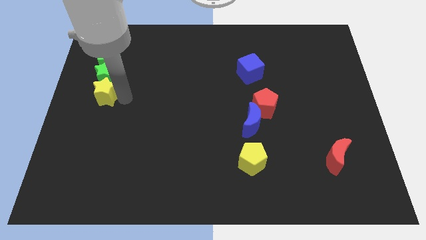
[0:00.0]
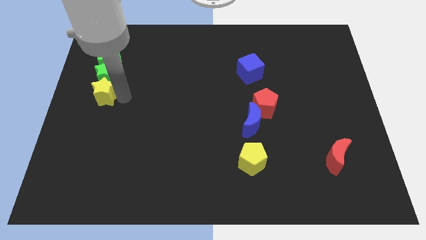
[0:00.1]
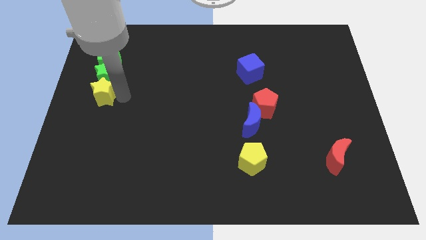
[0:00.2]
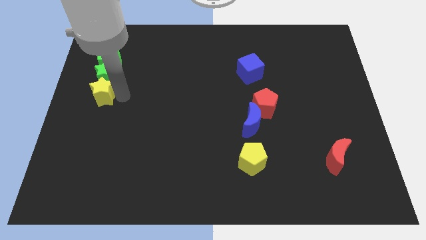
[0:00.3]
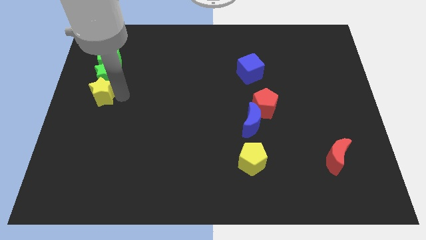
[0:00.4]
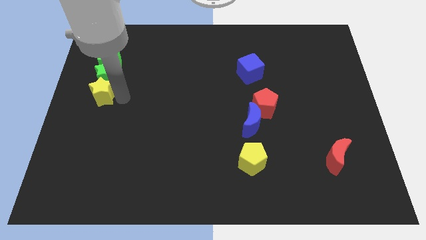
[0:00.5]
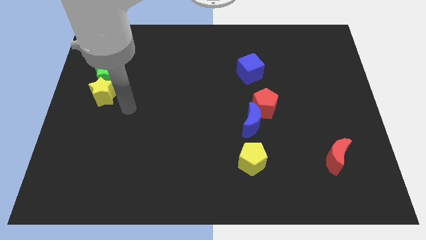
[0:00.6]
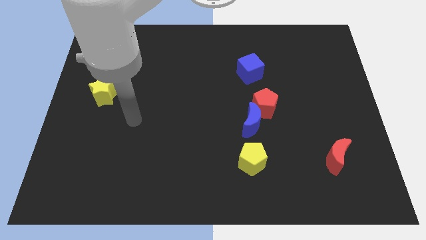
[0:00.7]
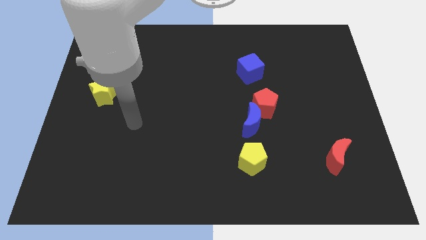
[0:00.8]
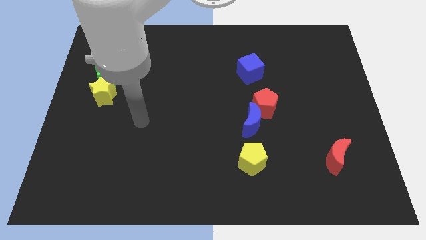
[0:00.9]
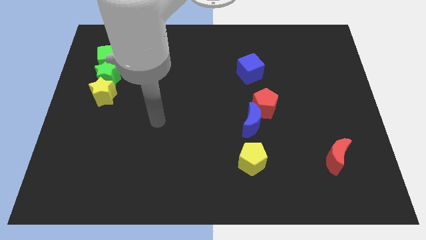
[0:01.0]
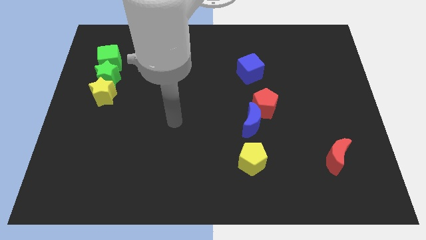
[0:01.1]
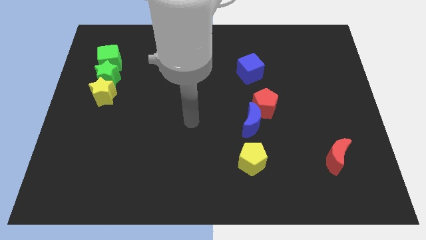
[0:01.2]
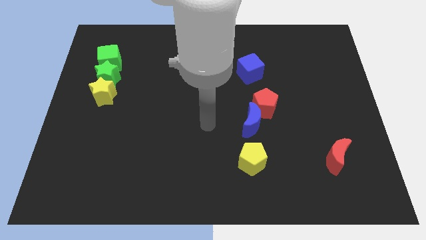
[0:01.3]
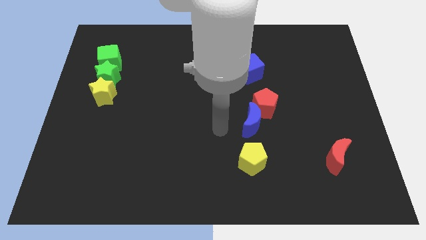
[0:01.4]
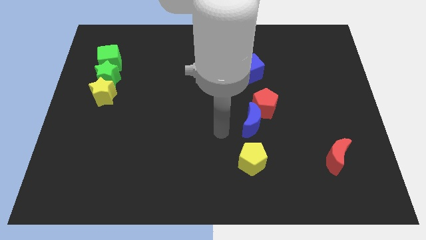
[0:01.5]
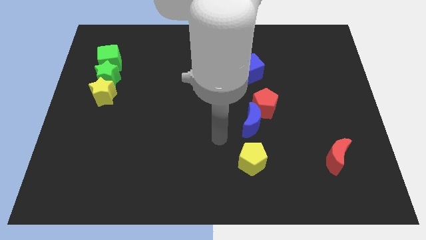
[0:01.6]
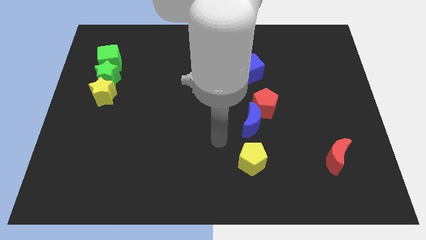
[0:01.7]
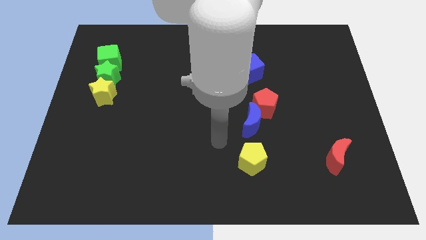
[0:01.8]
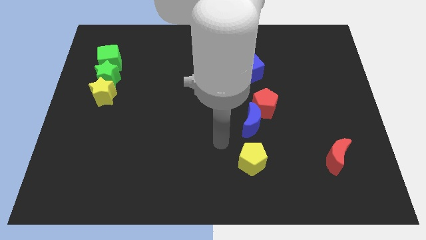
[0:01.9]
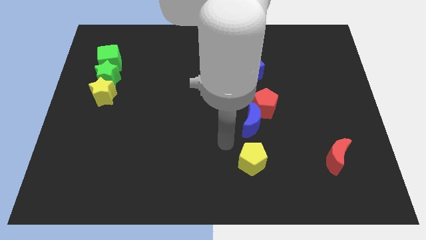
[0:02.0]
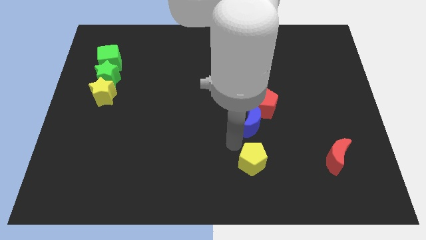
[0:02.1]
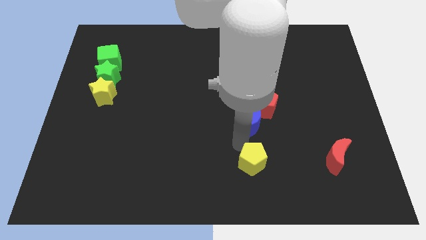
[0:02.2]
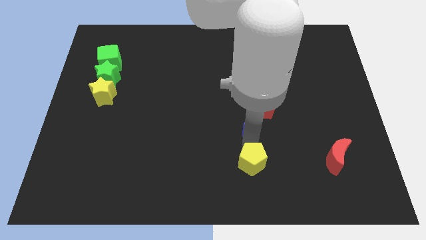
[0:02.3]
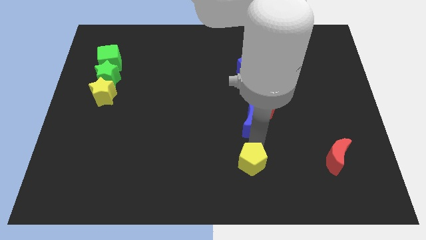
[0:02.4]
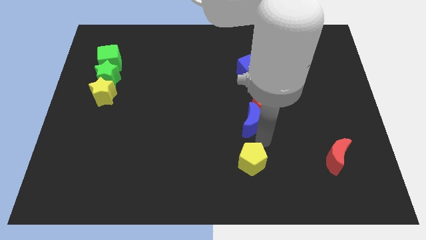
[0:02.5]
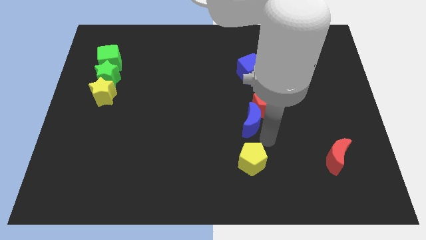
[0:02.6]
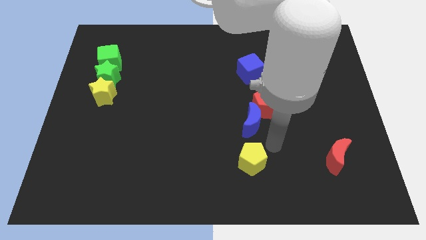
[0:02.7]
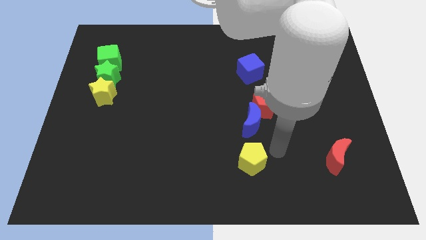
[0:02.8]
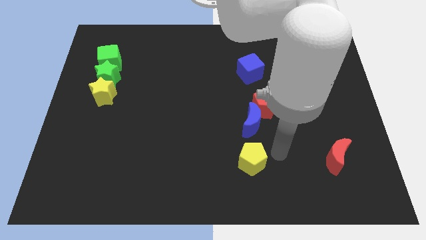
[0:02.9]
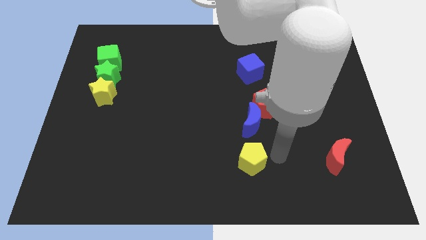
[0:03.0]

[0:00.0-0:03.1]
move your arm to the right of yellow pentagon

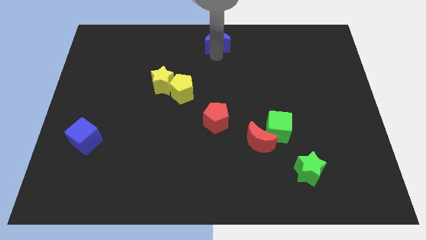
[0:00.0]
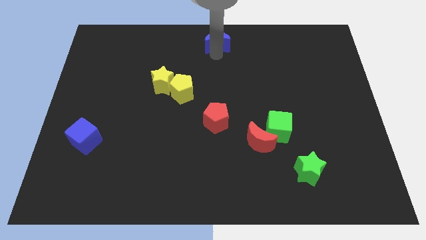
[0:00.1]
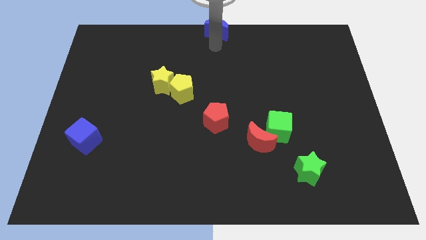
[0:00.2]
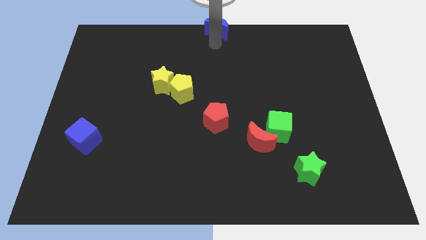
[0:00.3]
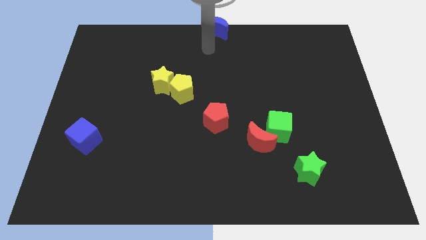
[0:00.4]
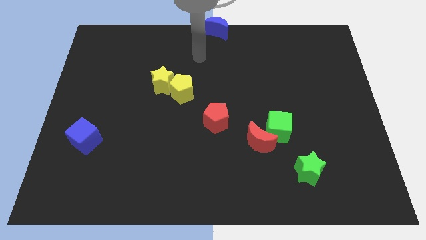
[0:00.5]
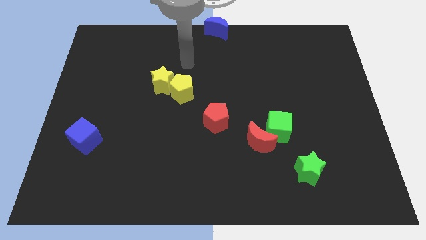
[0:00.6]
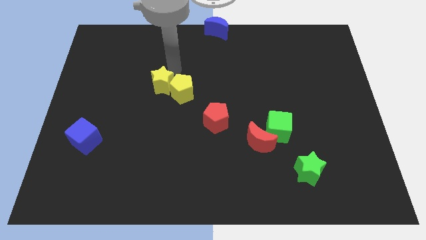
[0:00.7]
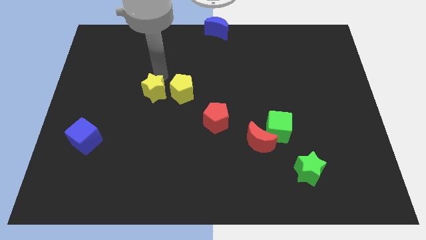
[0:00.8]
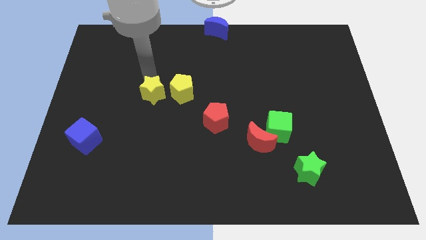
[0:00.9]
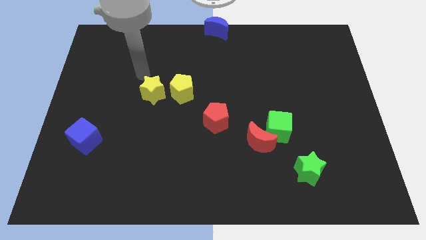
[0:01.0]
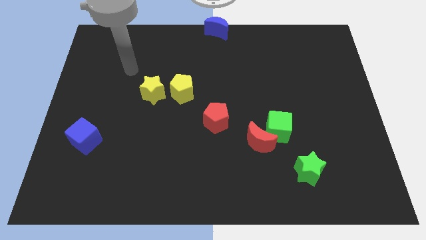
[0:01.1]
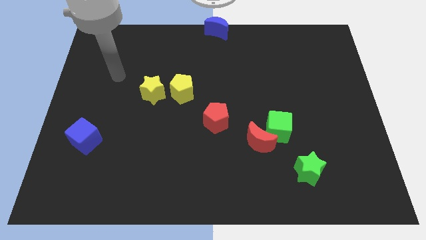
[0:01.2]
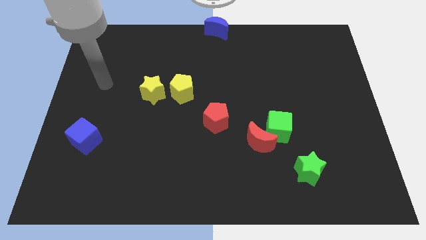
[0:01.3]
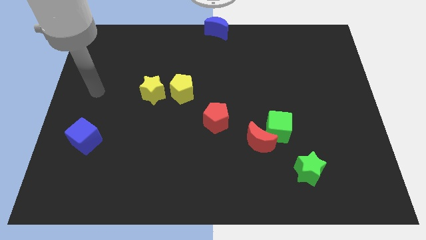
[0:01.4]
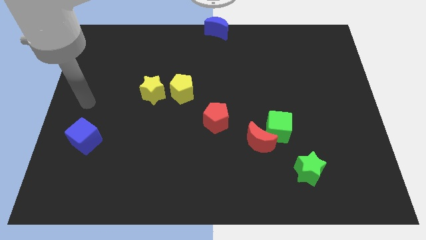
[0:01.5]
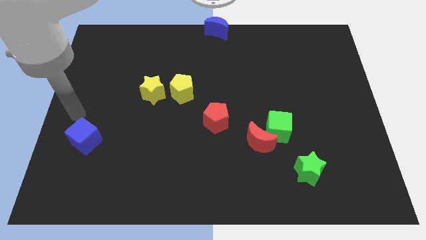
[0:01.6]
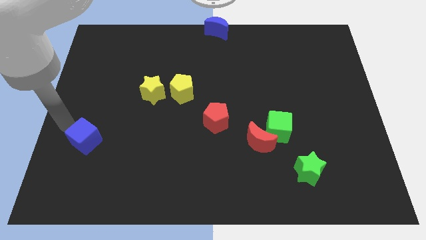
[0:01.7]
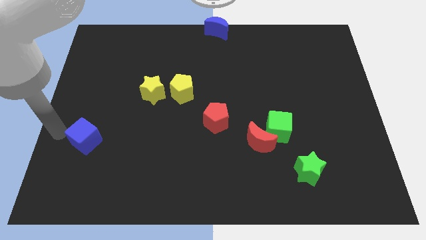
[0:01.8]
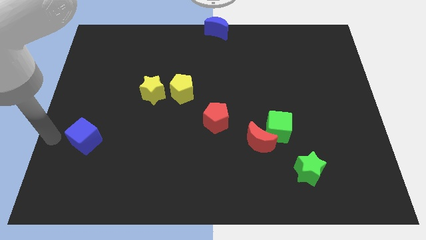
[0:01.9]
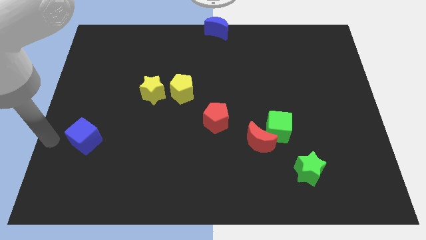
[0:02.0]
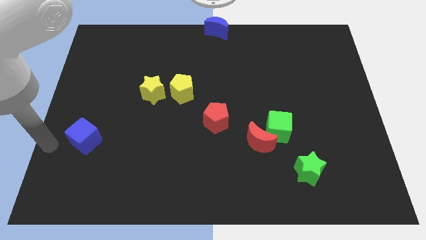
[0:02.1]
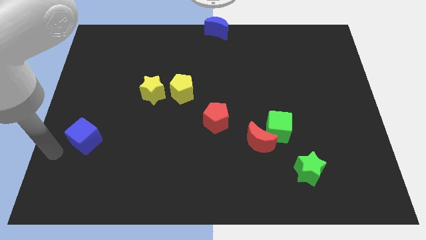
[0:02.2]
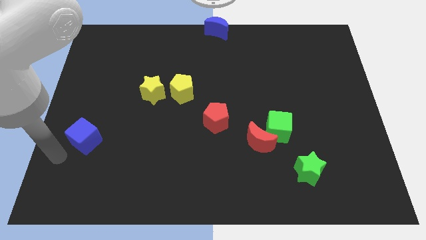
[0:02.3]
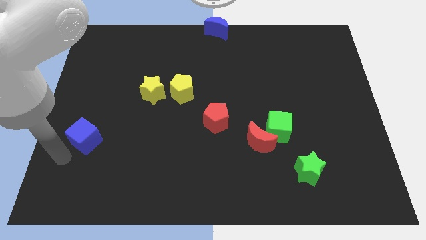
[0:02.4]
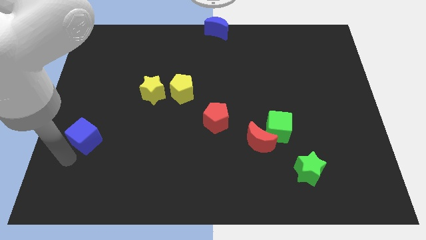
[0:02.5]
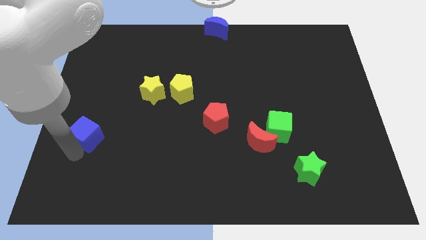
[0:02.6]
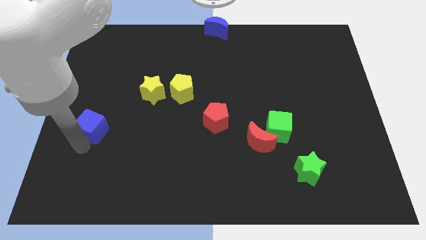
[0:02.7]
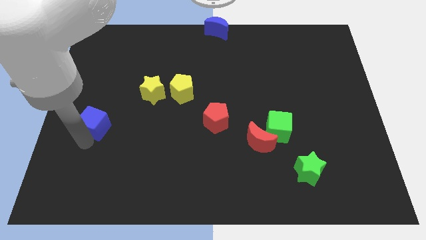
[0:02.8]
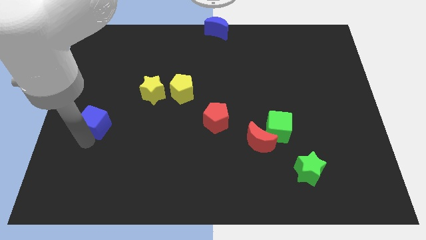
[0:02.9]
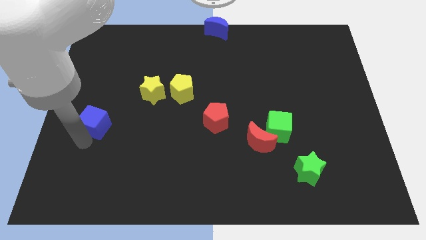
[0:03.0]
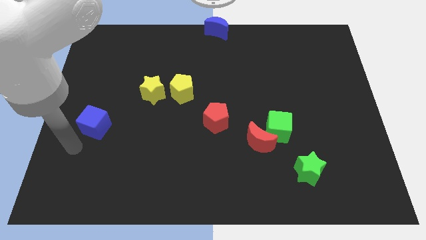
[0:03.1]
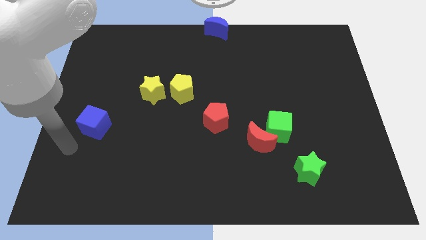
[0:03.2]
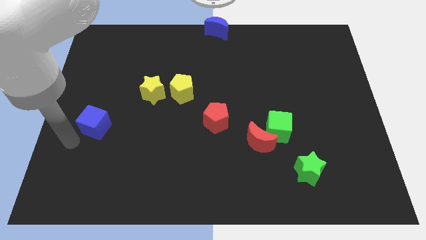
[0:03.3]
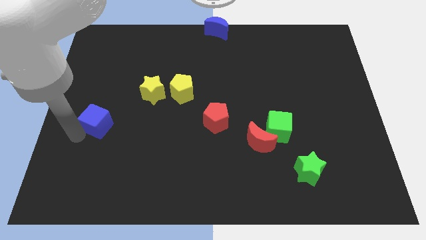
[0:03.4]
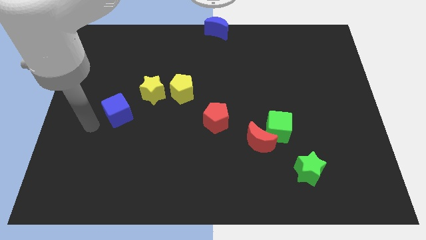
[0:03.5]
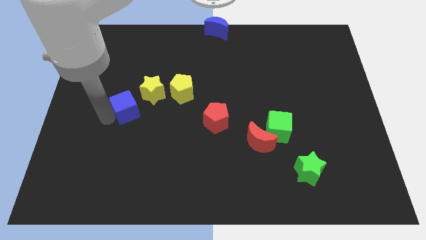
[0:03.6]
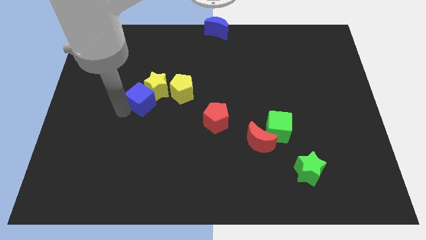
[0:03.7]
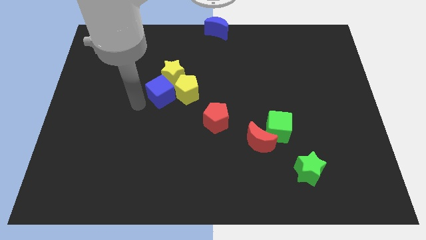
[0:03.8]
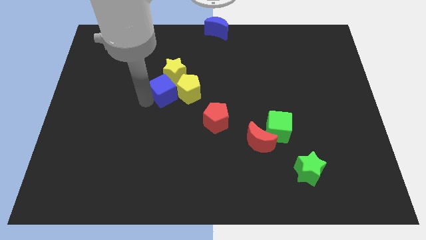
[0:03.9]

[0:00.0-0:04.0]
push the blue cube into the yellow blocks

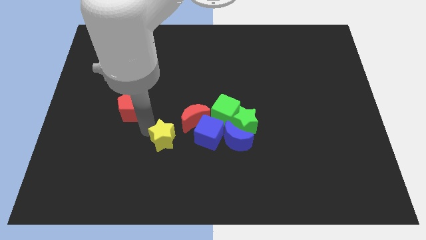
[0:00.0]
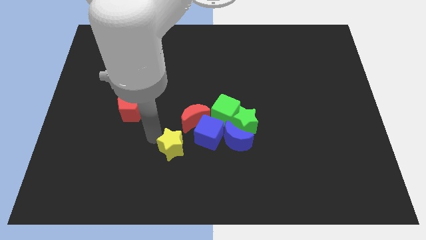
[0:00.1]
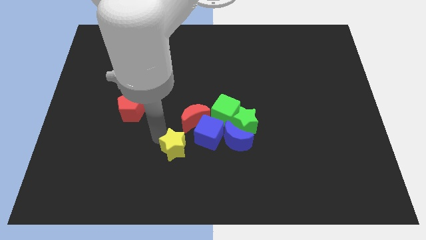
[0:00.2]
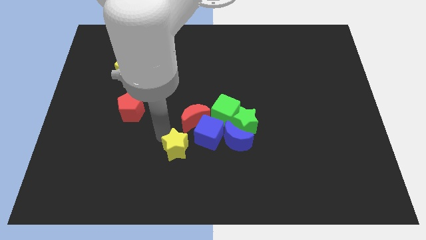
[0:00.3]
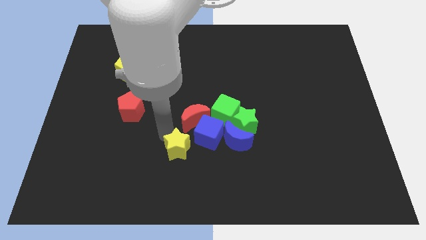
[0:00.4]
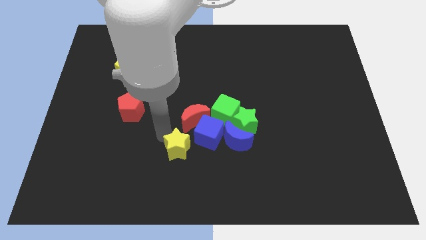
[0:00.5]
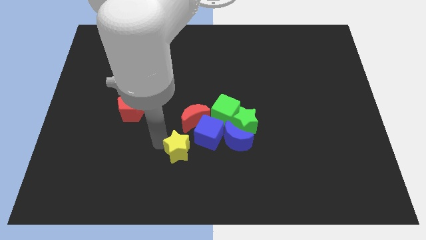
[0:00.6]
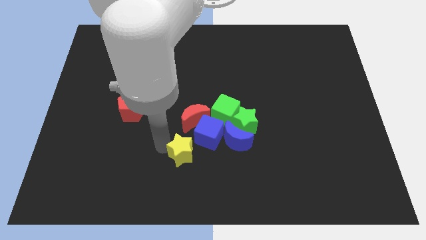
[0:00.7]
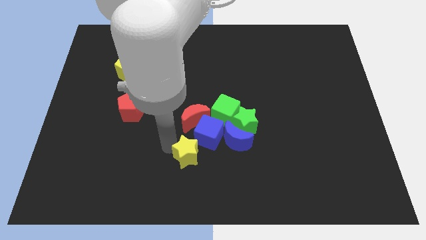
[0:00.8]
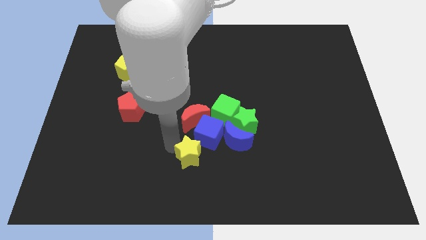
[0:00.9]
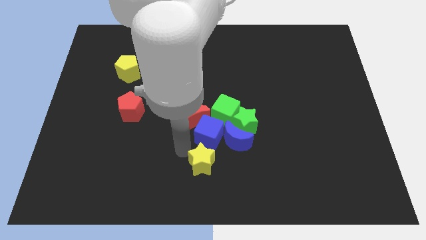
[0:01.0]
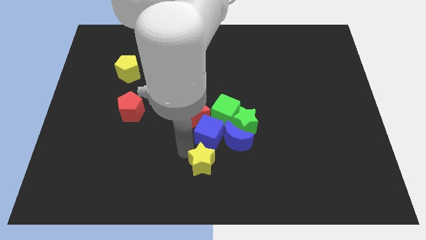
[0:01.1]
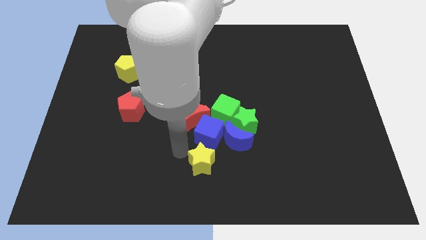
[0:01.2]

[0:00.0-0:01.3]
place yellow star below the blue cube

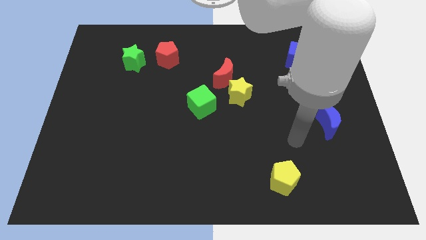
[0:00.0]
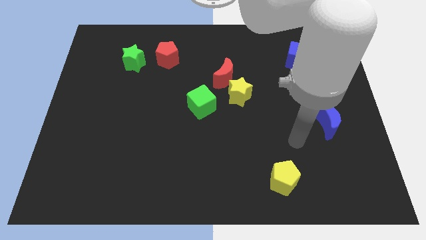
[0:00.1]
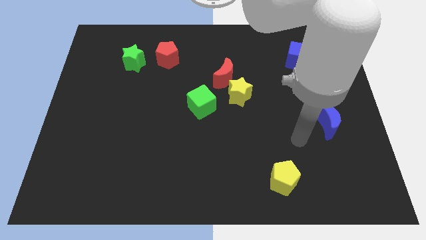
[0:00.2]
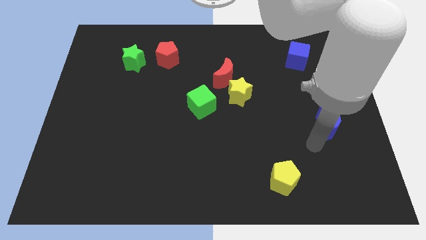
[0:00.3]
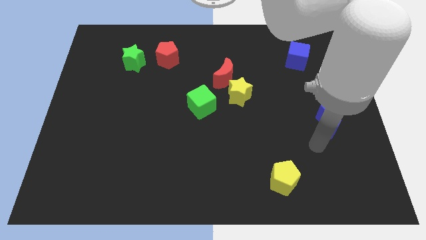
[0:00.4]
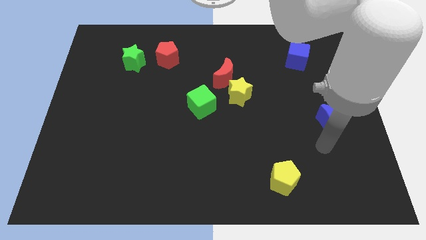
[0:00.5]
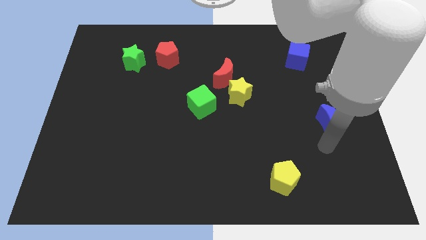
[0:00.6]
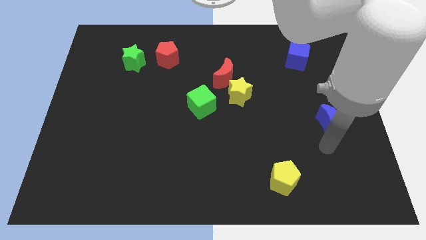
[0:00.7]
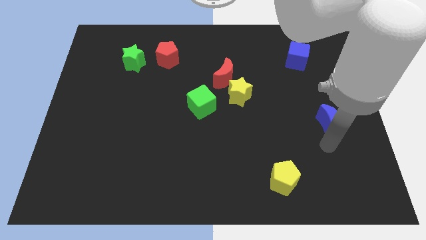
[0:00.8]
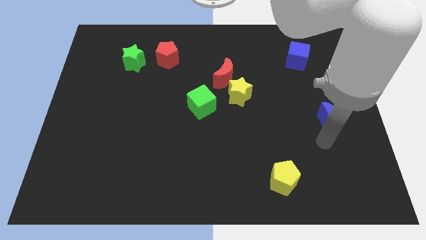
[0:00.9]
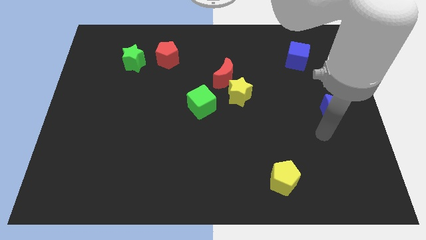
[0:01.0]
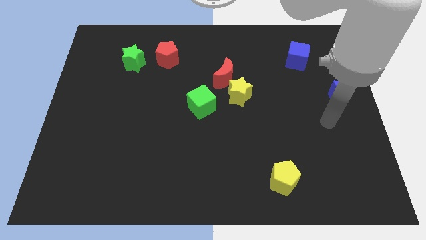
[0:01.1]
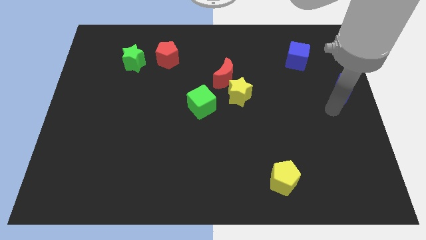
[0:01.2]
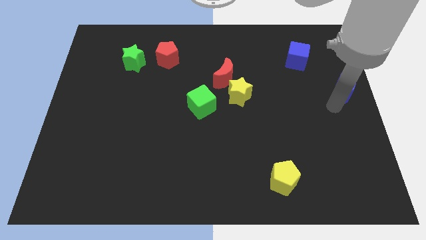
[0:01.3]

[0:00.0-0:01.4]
move the blue crescent towards the top right of the table
